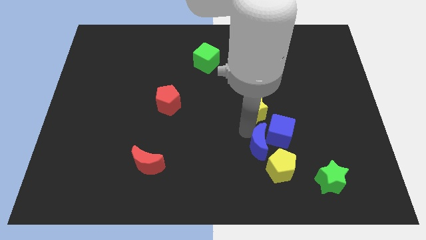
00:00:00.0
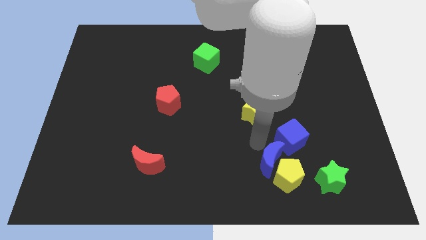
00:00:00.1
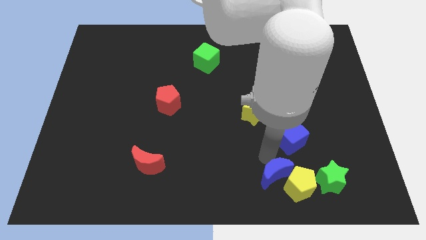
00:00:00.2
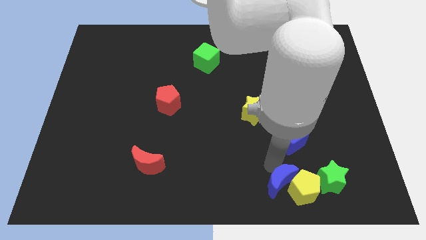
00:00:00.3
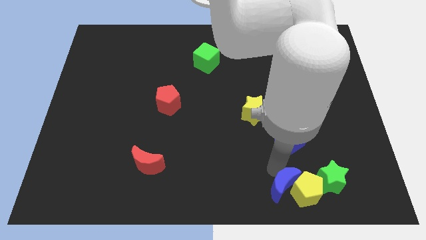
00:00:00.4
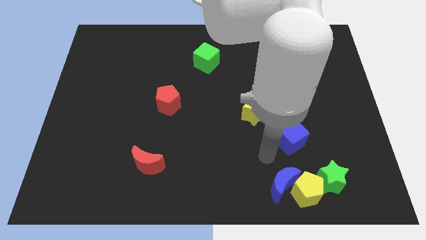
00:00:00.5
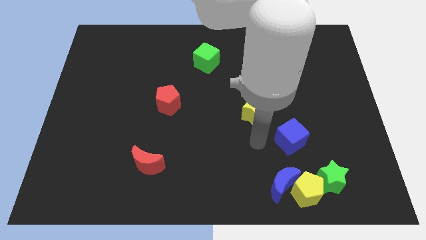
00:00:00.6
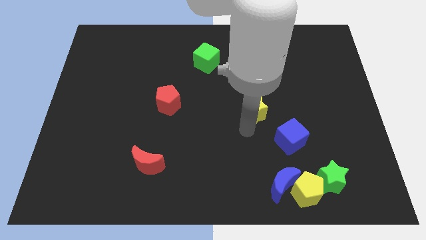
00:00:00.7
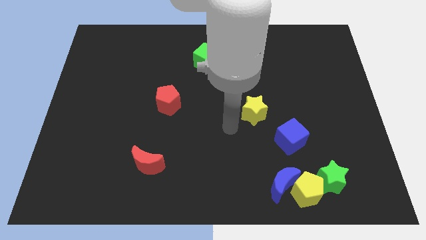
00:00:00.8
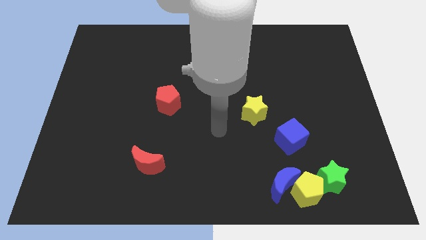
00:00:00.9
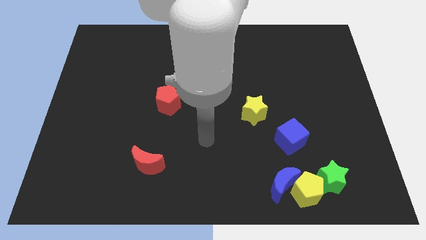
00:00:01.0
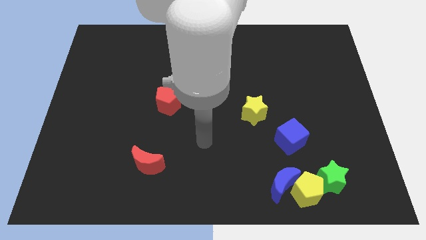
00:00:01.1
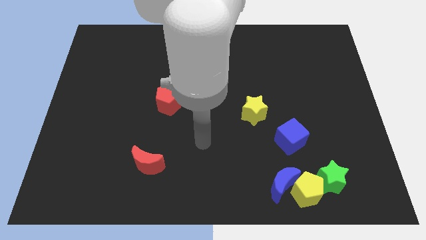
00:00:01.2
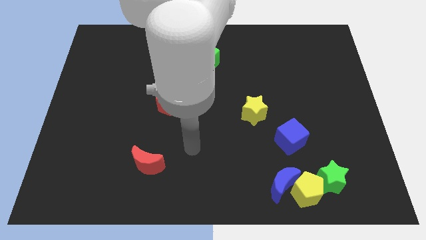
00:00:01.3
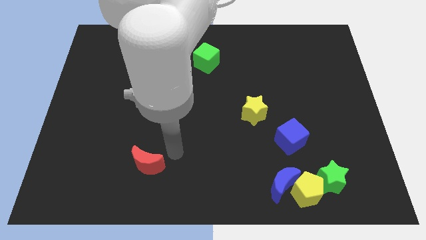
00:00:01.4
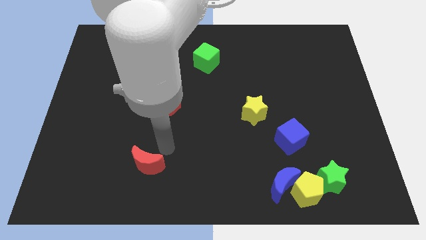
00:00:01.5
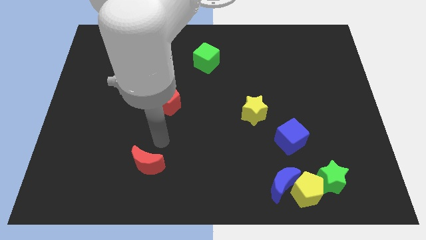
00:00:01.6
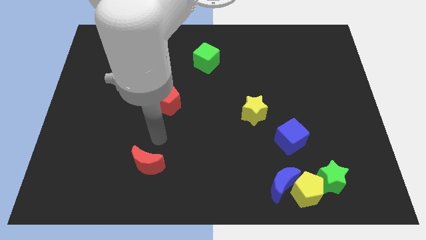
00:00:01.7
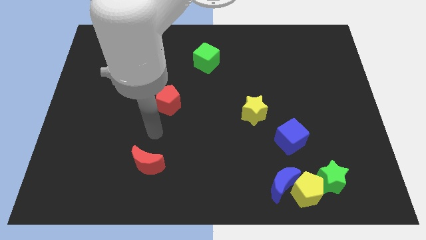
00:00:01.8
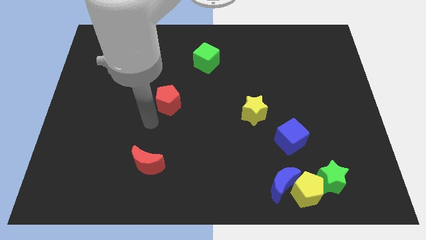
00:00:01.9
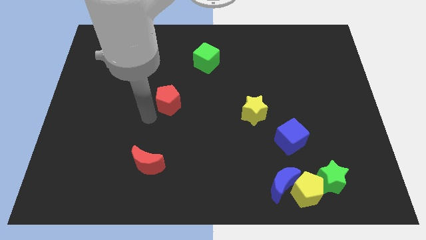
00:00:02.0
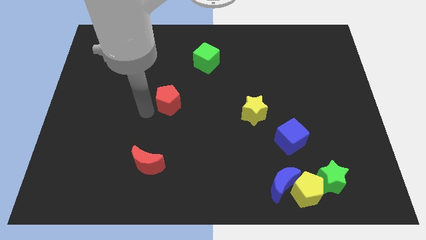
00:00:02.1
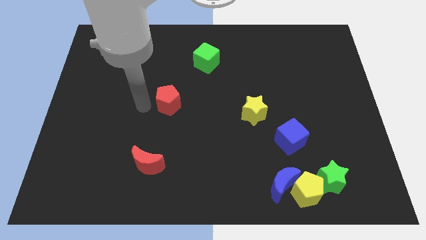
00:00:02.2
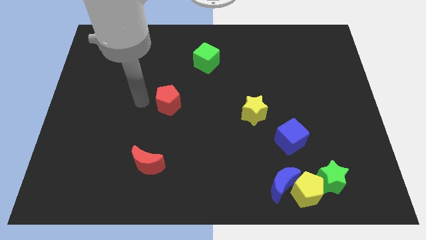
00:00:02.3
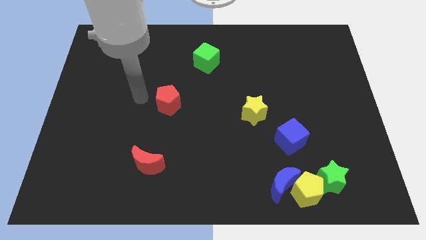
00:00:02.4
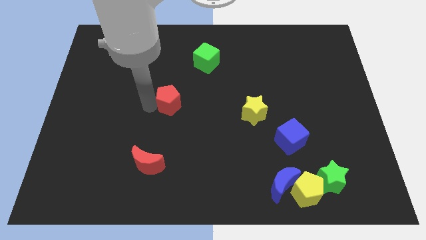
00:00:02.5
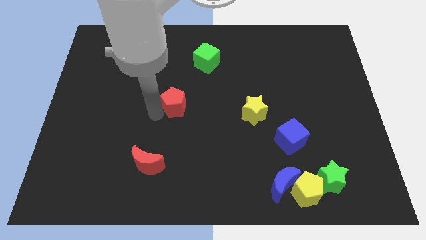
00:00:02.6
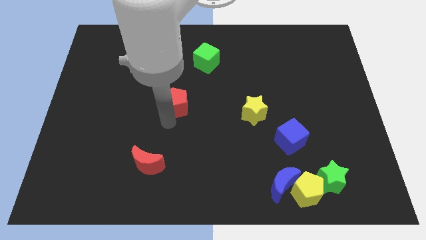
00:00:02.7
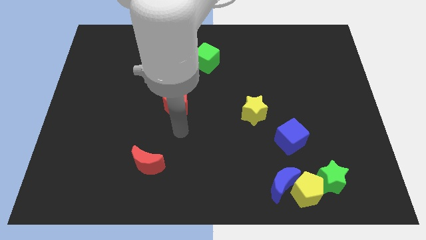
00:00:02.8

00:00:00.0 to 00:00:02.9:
push the blue moon into the yellow pentagon

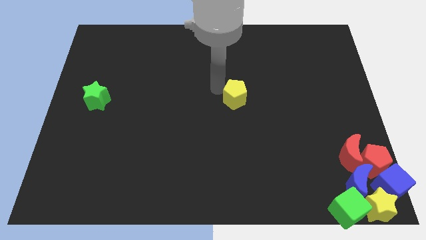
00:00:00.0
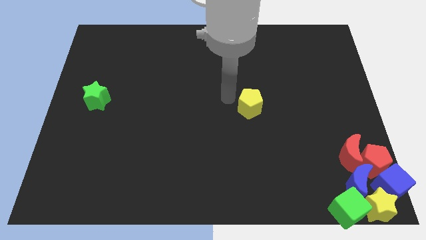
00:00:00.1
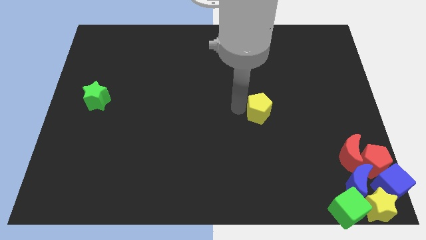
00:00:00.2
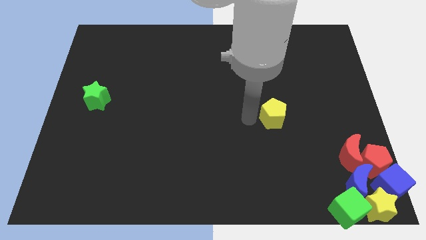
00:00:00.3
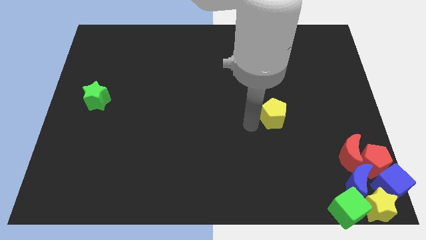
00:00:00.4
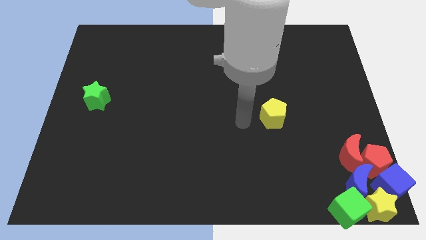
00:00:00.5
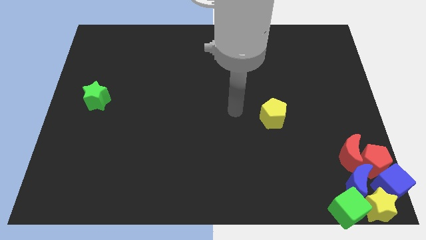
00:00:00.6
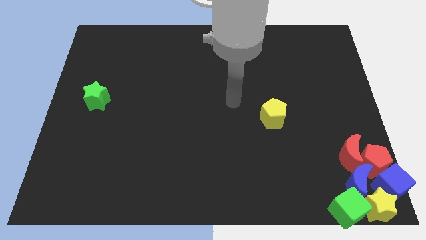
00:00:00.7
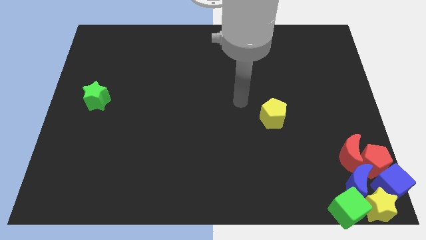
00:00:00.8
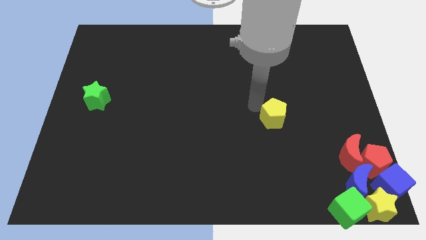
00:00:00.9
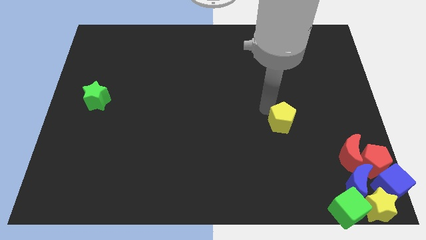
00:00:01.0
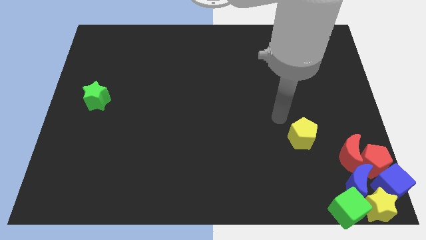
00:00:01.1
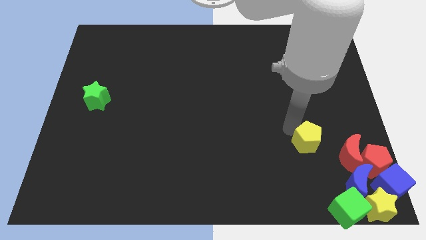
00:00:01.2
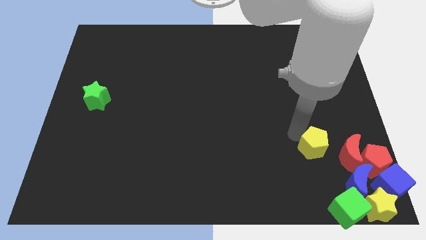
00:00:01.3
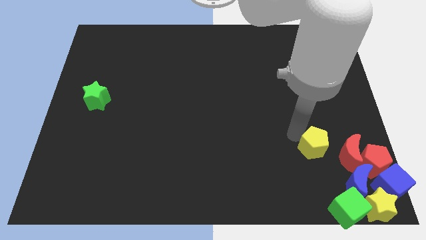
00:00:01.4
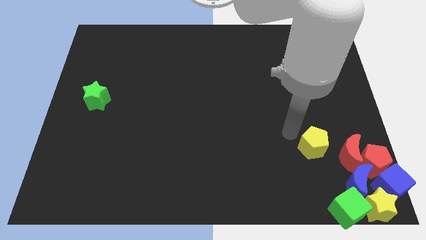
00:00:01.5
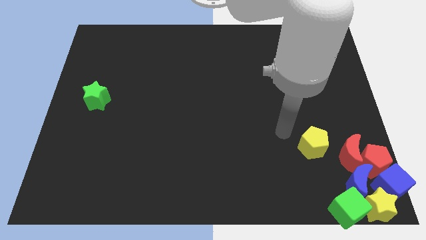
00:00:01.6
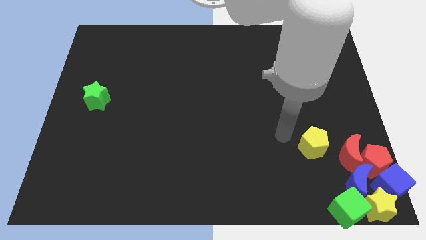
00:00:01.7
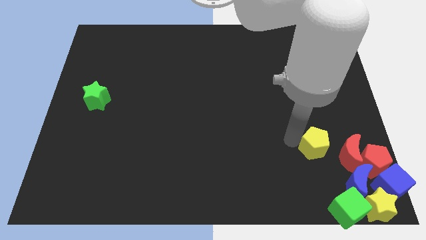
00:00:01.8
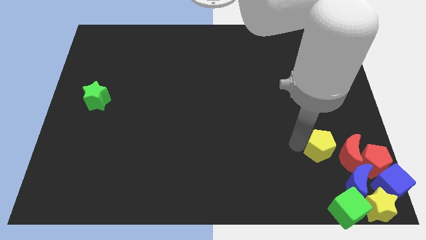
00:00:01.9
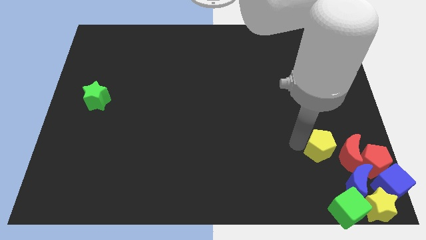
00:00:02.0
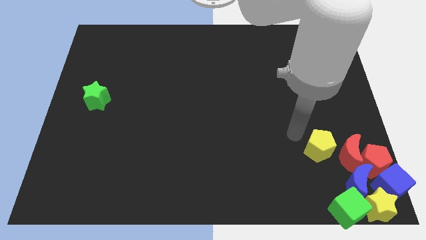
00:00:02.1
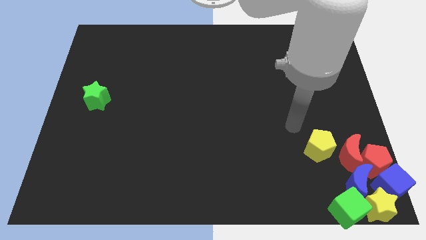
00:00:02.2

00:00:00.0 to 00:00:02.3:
place the yellow pentagon close the red moon

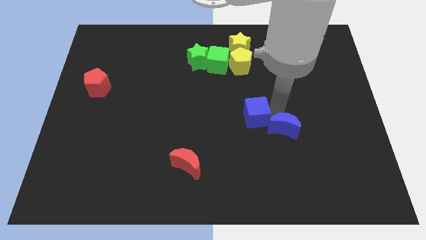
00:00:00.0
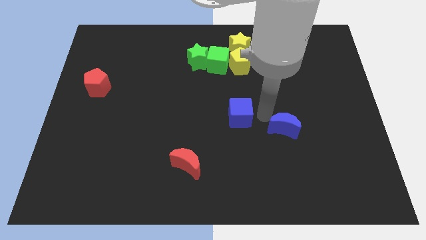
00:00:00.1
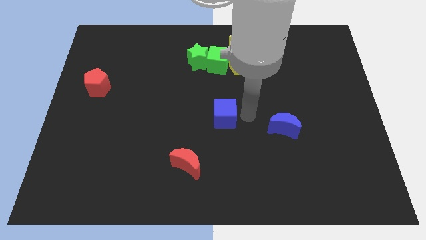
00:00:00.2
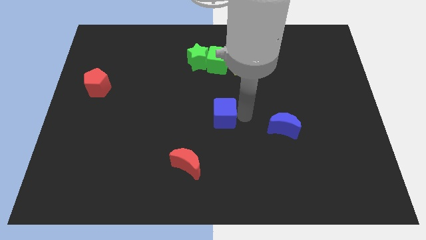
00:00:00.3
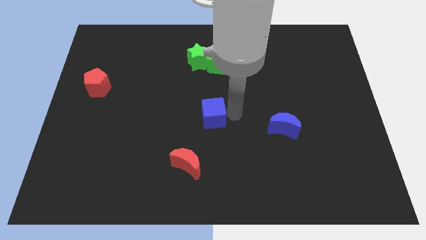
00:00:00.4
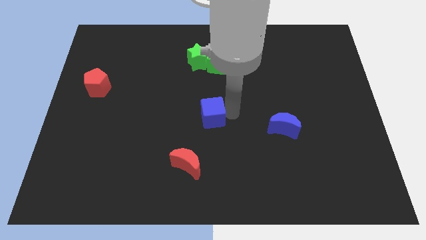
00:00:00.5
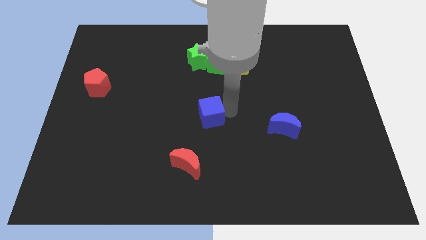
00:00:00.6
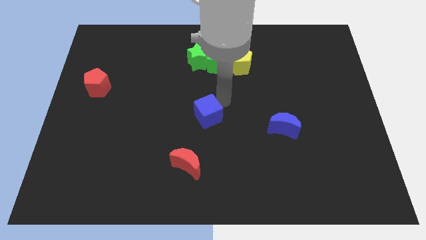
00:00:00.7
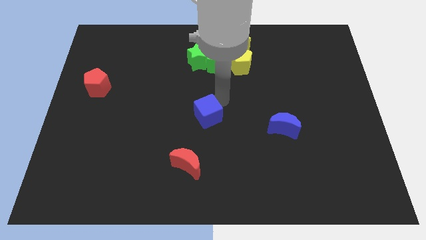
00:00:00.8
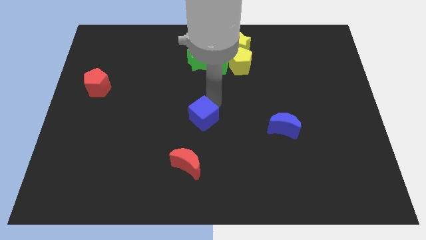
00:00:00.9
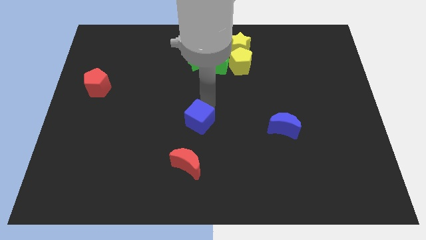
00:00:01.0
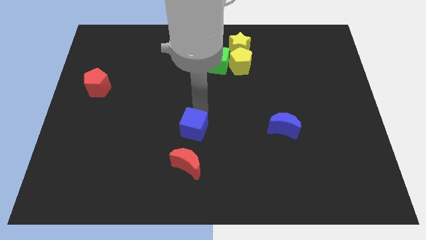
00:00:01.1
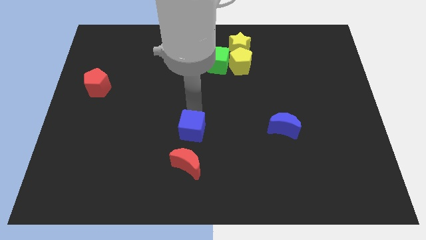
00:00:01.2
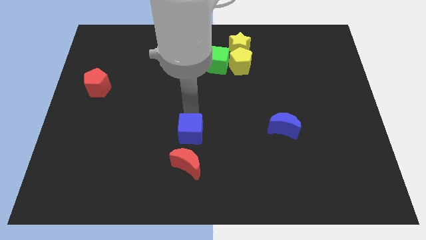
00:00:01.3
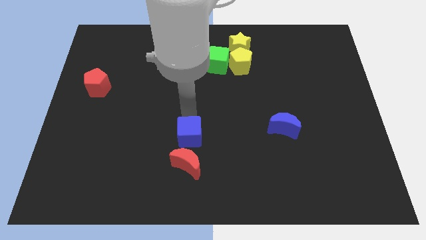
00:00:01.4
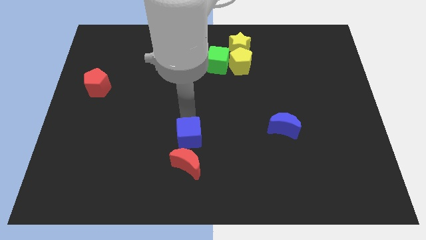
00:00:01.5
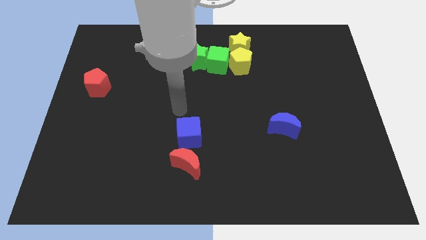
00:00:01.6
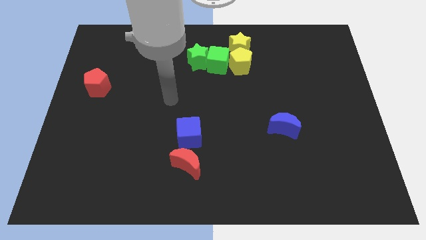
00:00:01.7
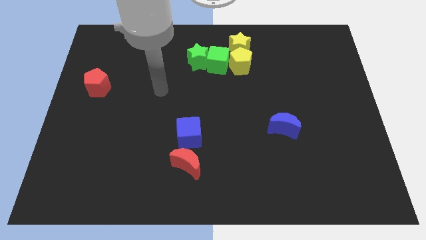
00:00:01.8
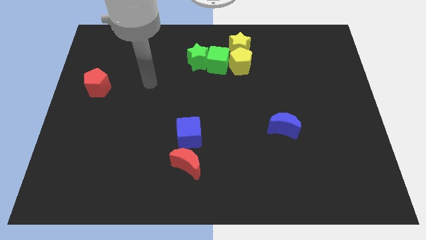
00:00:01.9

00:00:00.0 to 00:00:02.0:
place the blue cube into red moon on top

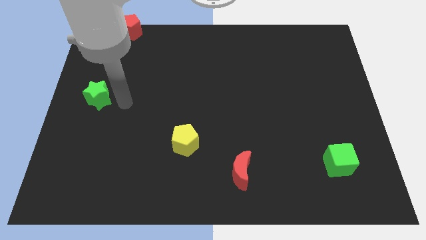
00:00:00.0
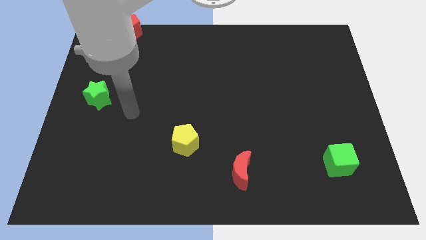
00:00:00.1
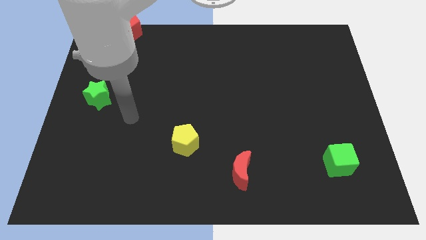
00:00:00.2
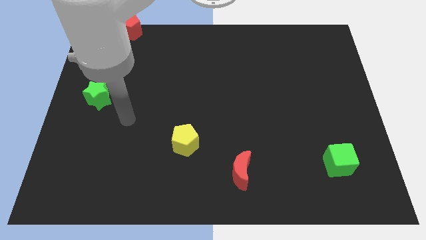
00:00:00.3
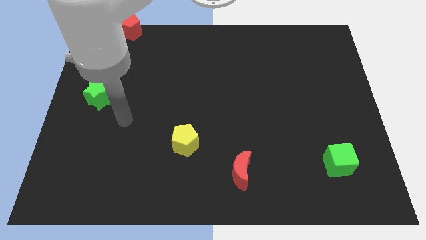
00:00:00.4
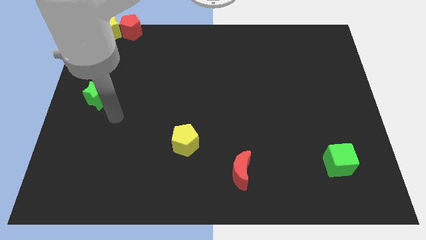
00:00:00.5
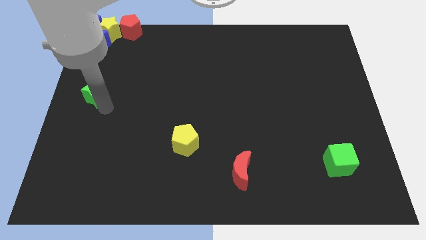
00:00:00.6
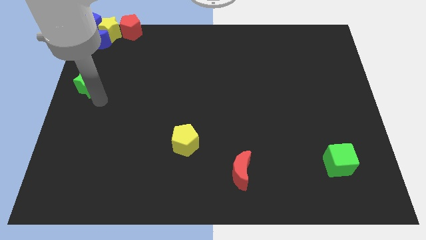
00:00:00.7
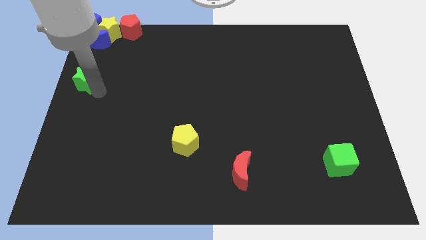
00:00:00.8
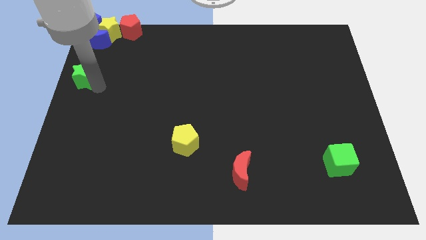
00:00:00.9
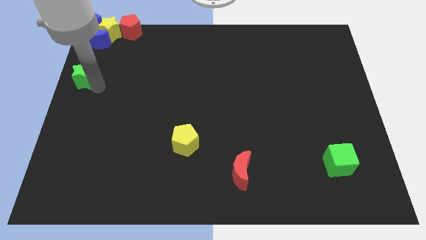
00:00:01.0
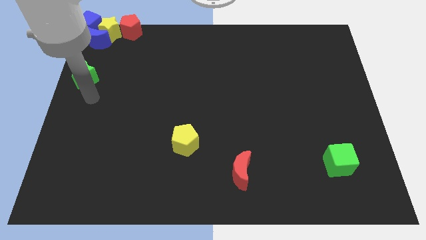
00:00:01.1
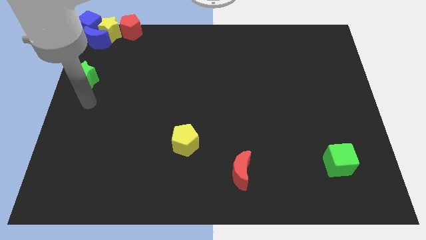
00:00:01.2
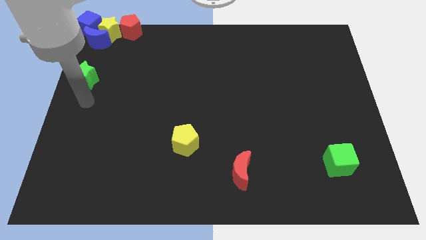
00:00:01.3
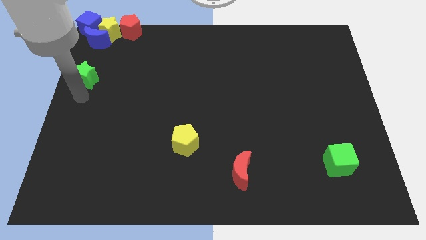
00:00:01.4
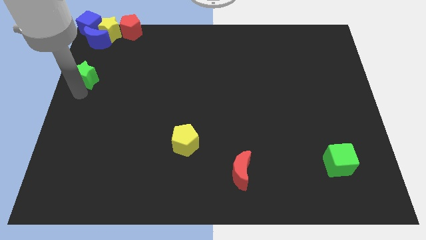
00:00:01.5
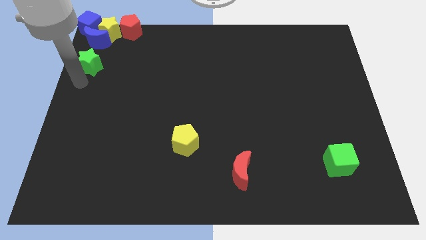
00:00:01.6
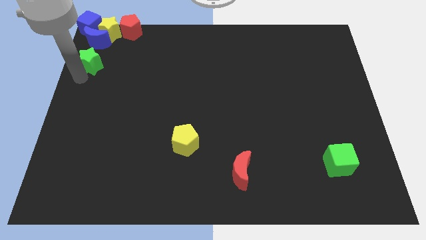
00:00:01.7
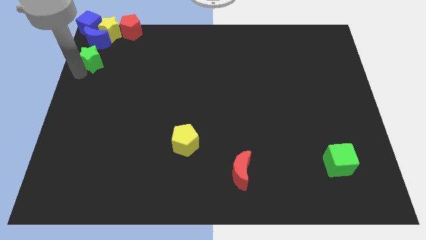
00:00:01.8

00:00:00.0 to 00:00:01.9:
move the green star to the bottom of the blue crescent
